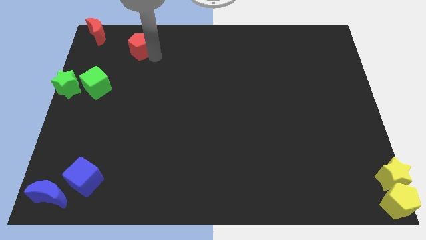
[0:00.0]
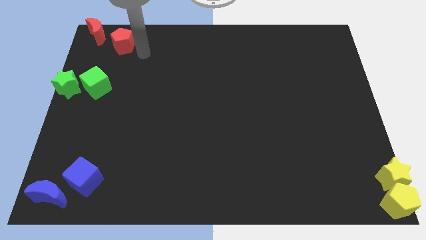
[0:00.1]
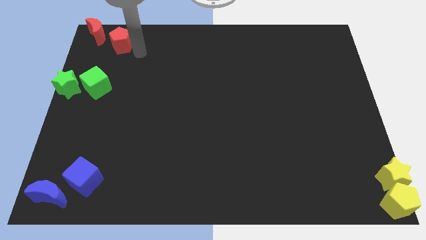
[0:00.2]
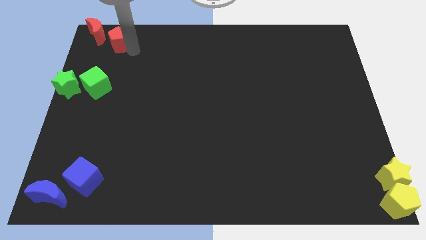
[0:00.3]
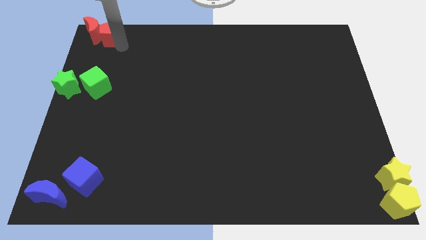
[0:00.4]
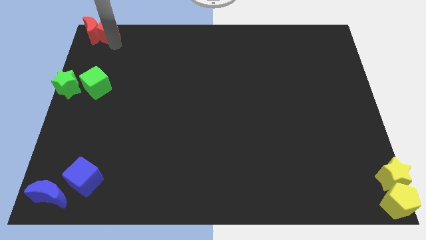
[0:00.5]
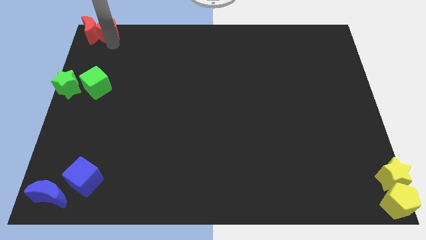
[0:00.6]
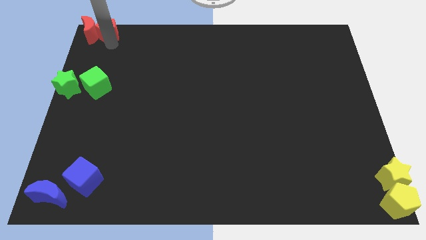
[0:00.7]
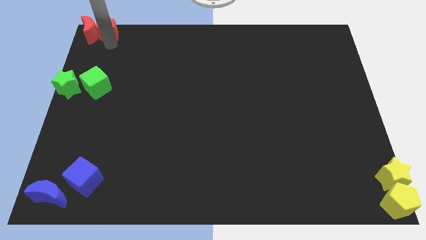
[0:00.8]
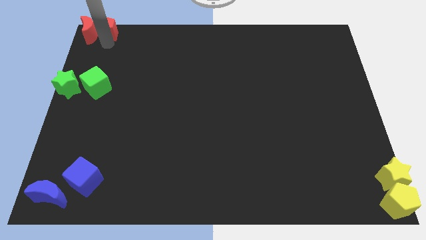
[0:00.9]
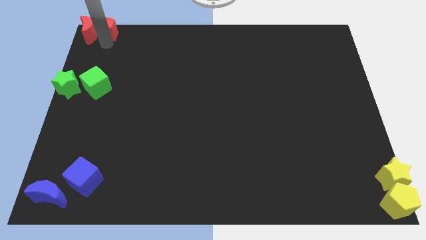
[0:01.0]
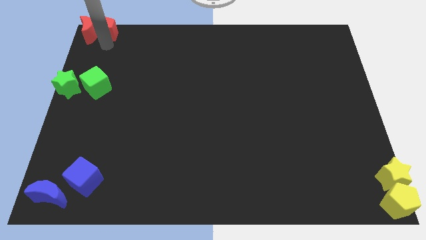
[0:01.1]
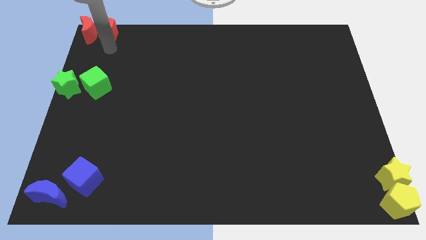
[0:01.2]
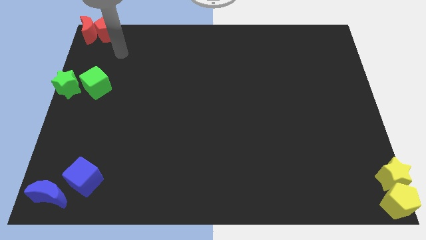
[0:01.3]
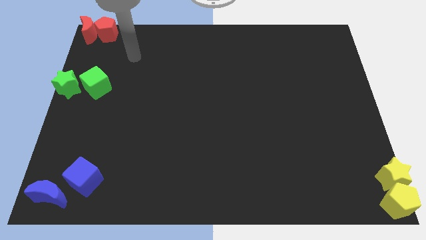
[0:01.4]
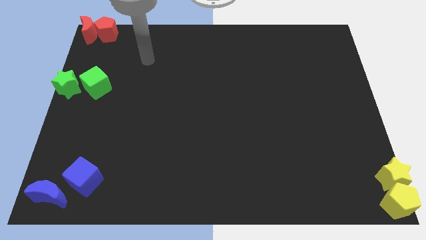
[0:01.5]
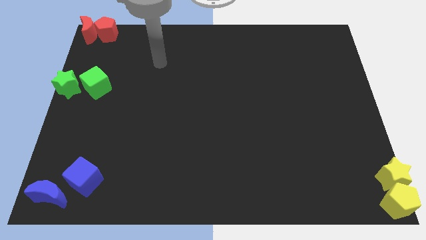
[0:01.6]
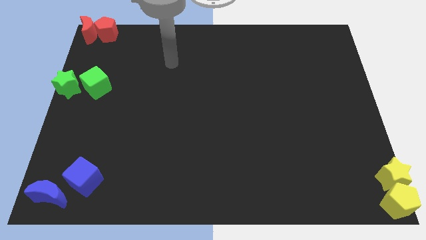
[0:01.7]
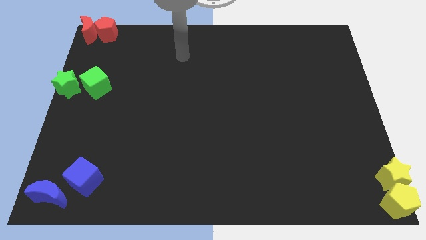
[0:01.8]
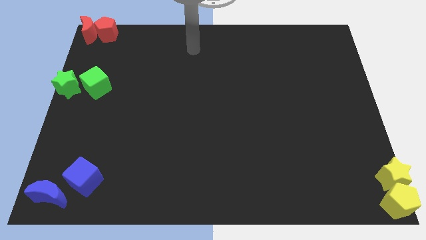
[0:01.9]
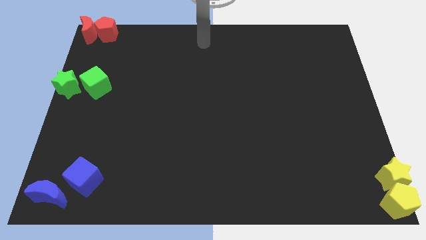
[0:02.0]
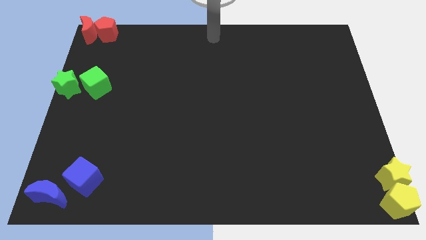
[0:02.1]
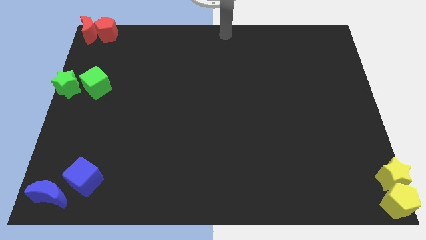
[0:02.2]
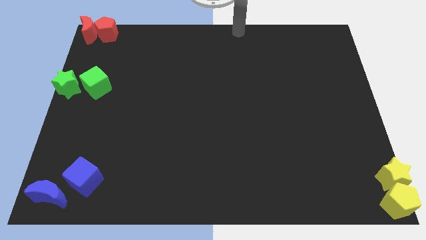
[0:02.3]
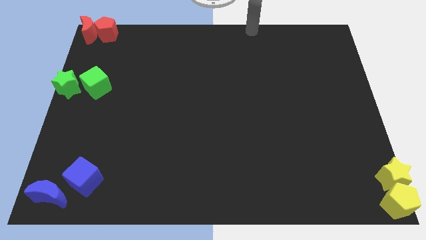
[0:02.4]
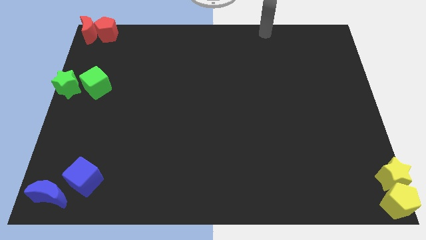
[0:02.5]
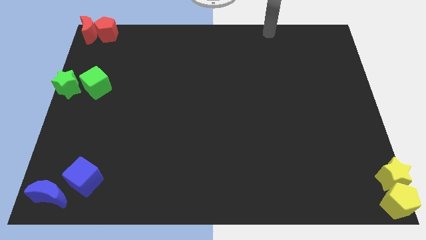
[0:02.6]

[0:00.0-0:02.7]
put the red blocks together to top left corner

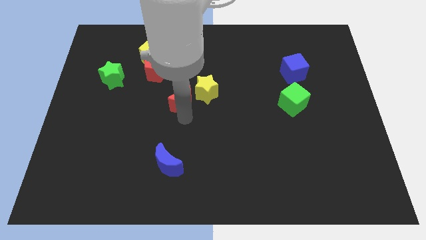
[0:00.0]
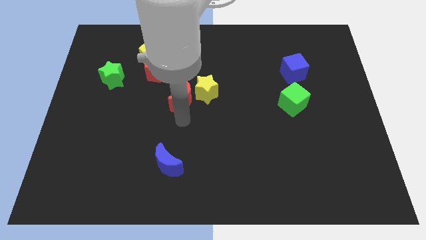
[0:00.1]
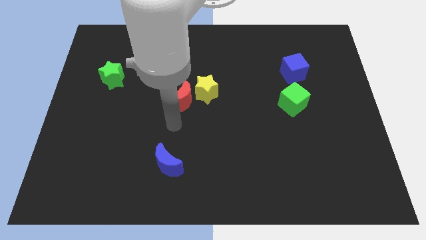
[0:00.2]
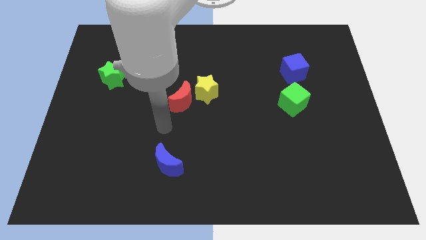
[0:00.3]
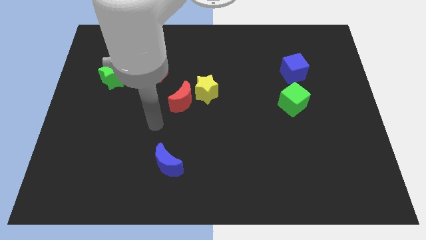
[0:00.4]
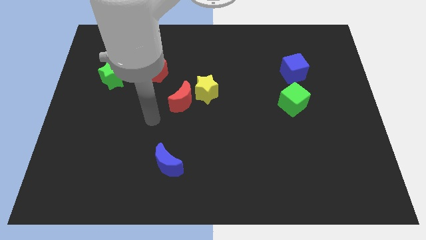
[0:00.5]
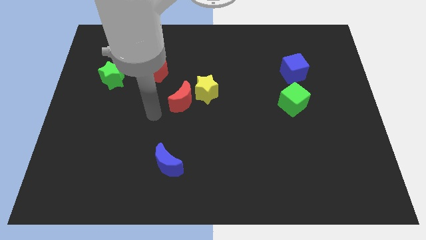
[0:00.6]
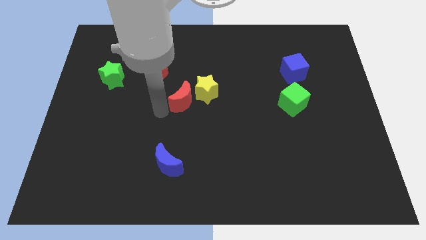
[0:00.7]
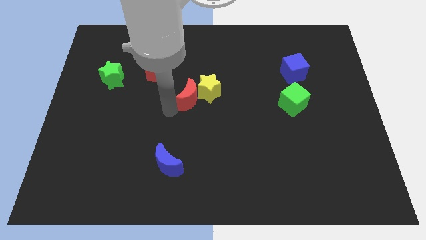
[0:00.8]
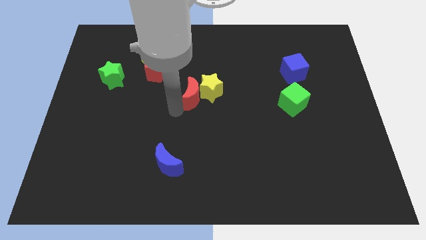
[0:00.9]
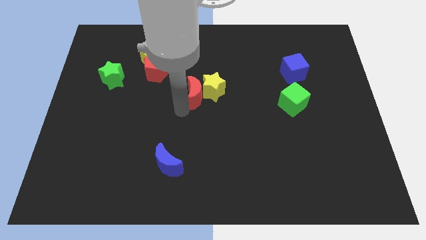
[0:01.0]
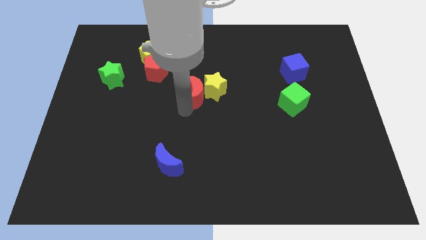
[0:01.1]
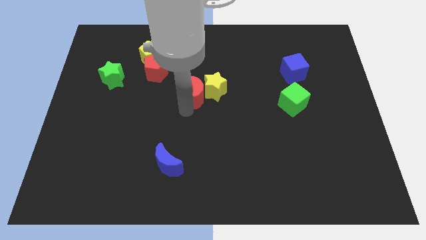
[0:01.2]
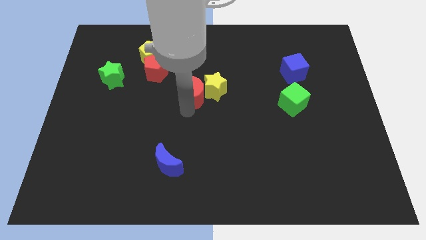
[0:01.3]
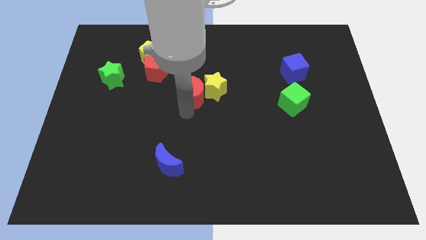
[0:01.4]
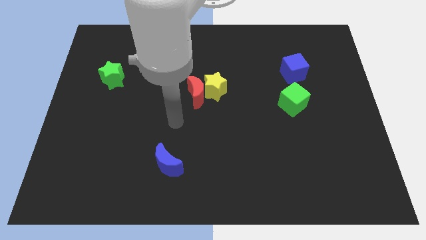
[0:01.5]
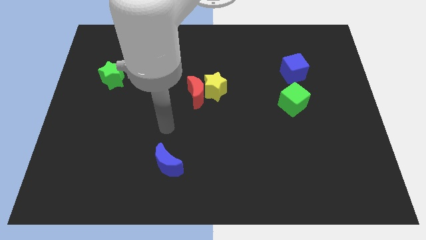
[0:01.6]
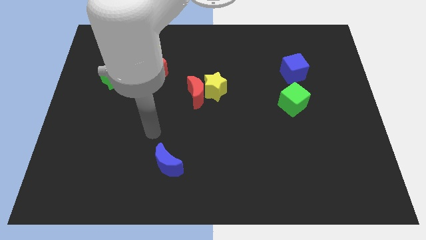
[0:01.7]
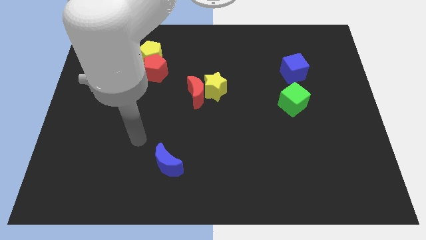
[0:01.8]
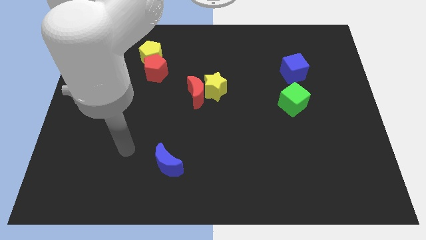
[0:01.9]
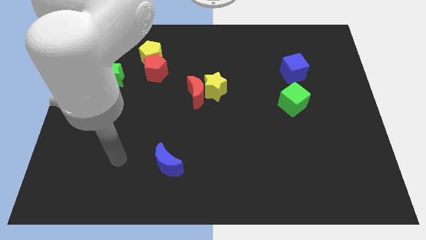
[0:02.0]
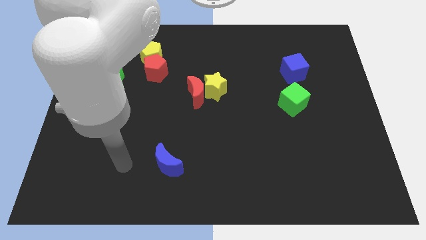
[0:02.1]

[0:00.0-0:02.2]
push the red moon into the yellow star

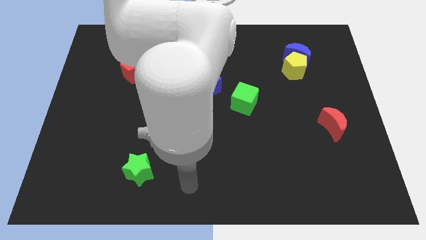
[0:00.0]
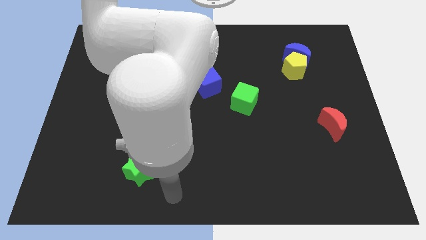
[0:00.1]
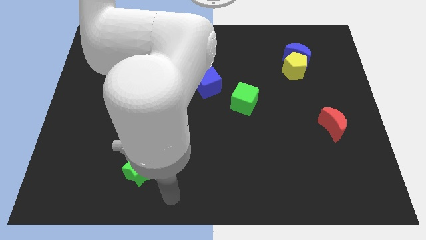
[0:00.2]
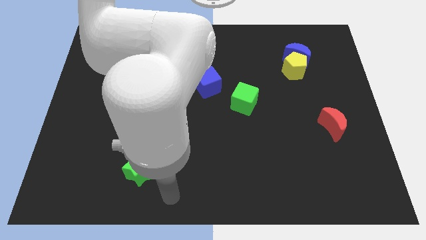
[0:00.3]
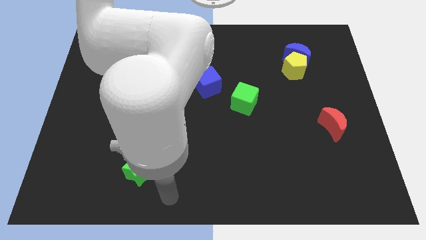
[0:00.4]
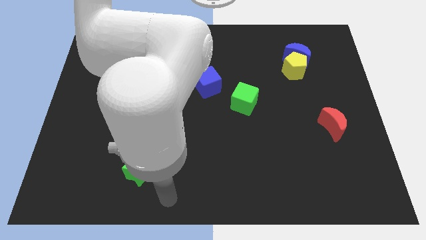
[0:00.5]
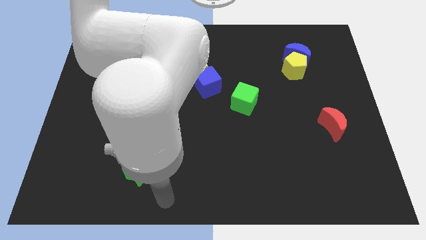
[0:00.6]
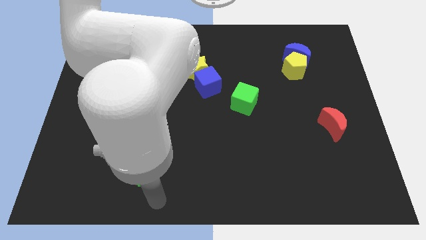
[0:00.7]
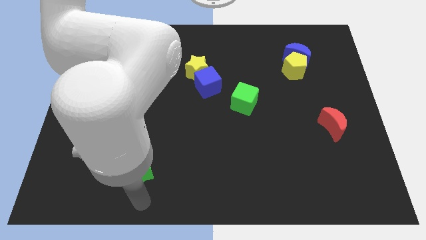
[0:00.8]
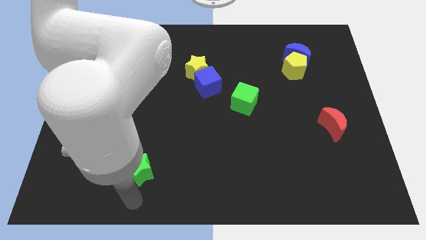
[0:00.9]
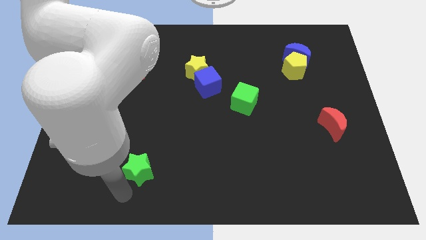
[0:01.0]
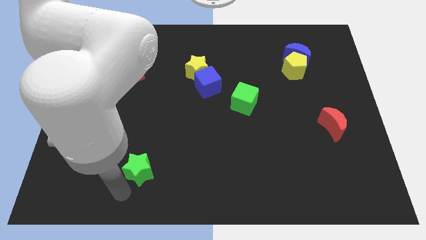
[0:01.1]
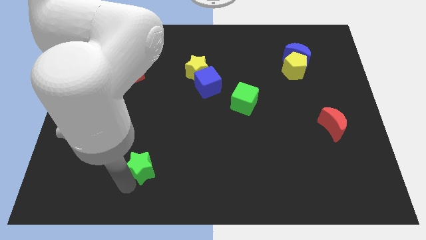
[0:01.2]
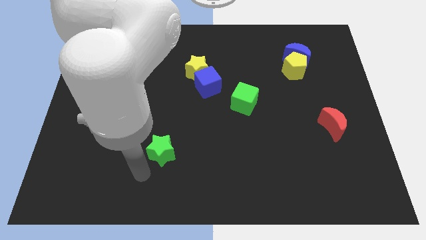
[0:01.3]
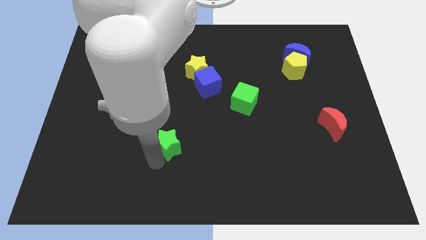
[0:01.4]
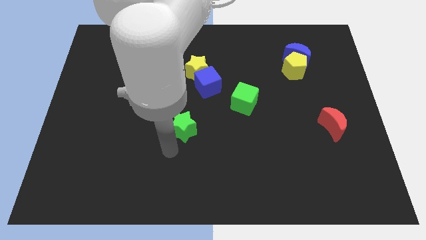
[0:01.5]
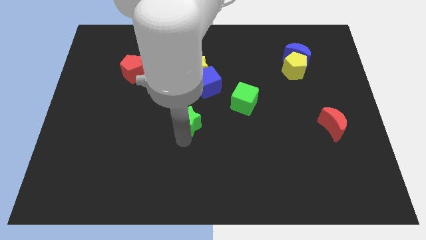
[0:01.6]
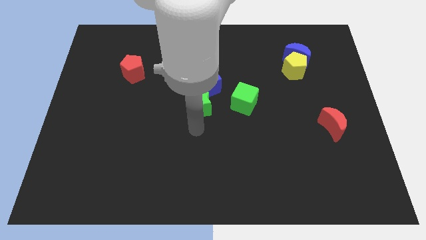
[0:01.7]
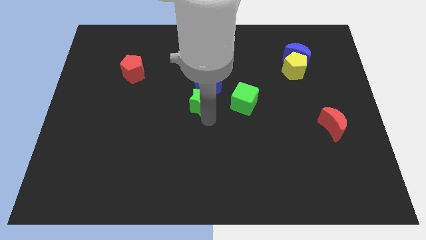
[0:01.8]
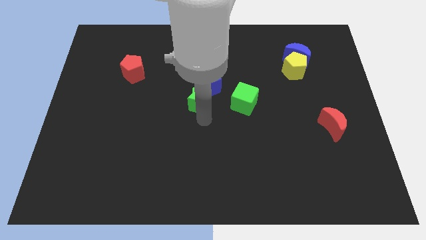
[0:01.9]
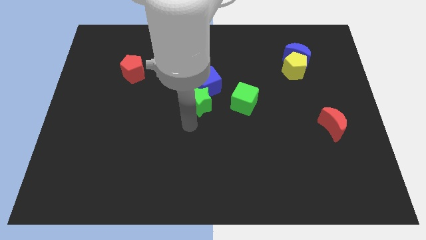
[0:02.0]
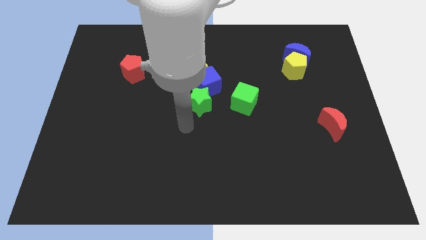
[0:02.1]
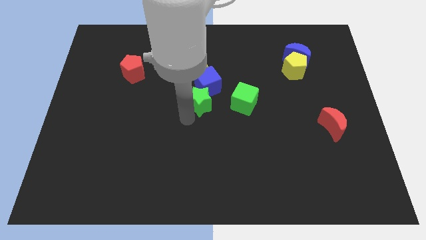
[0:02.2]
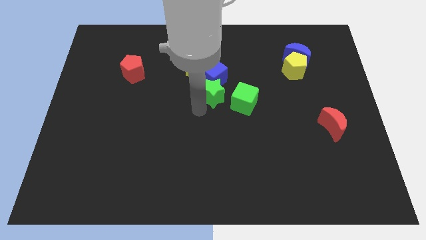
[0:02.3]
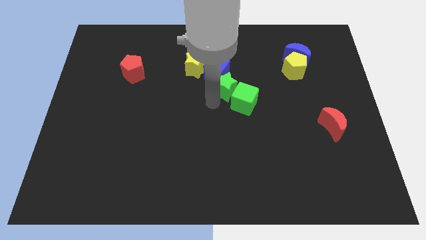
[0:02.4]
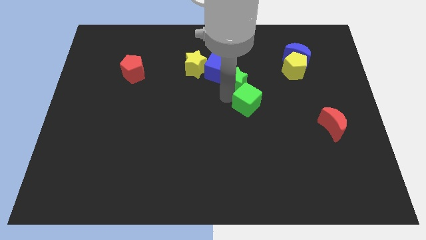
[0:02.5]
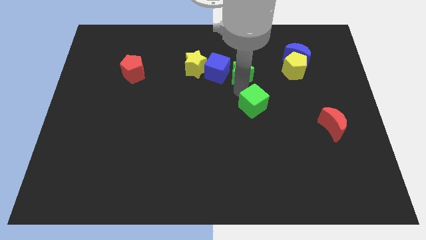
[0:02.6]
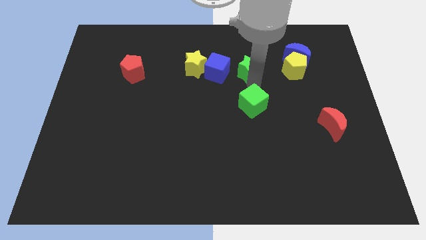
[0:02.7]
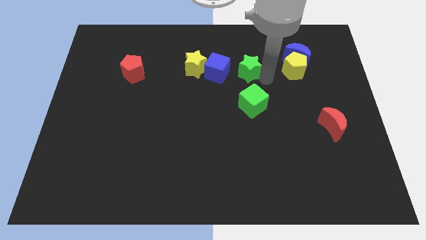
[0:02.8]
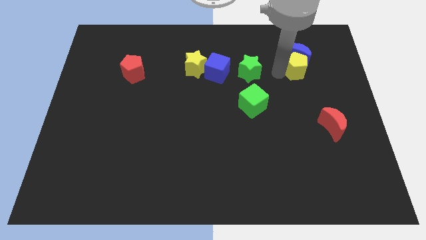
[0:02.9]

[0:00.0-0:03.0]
push green star right to the blue cube

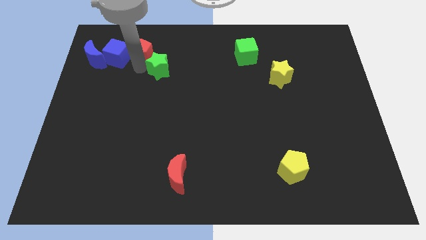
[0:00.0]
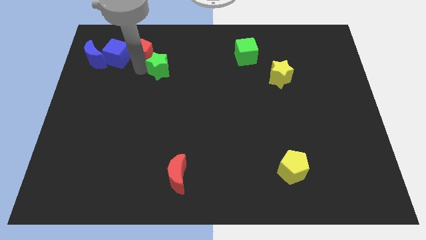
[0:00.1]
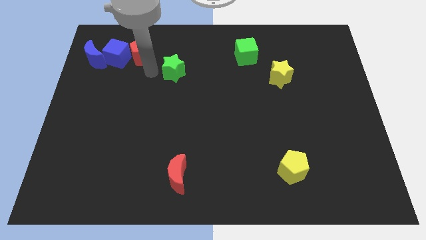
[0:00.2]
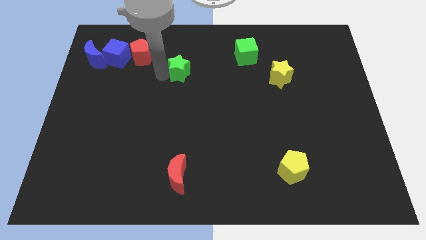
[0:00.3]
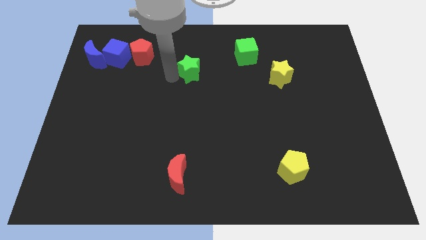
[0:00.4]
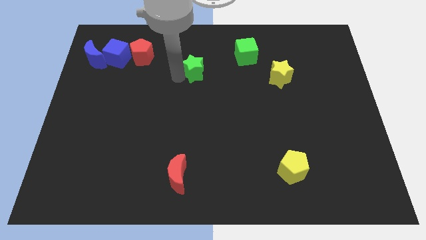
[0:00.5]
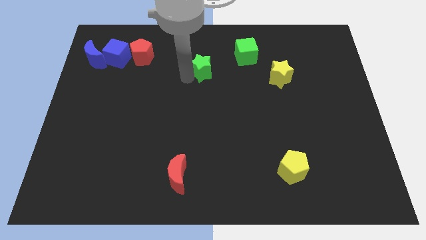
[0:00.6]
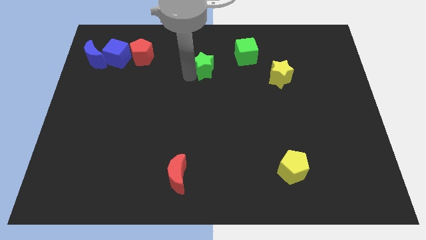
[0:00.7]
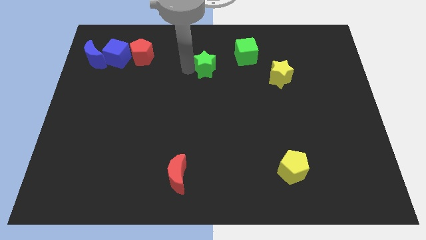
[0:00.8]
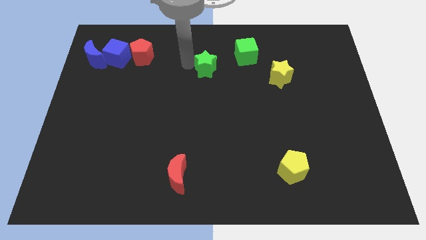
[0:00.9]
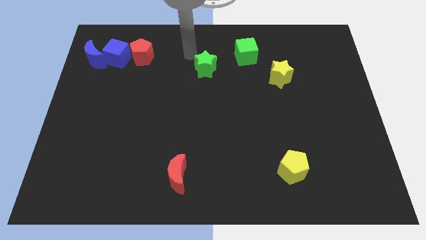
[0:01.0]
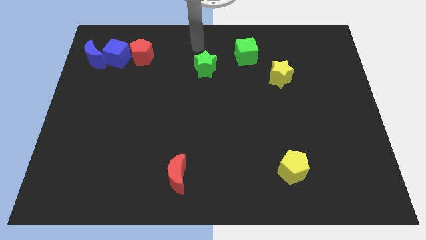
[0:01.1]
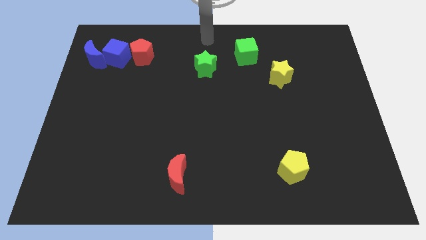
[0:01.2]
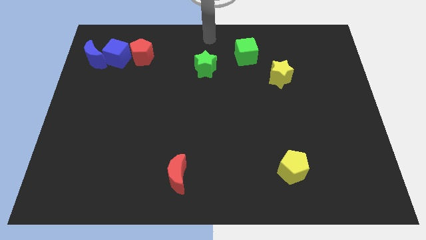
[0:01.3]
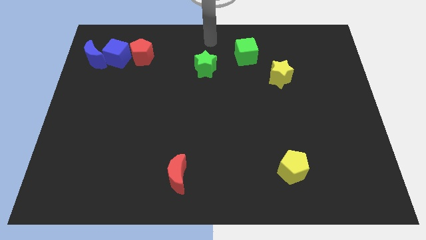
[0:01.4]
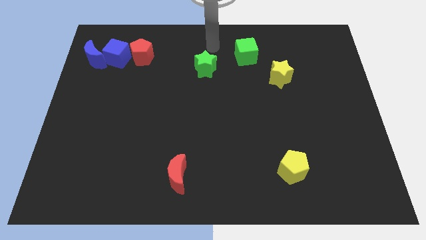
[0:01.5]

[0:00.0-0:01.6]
separate the green star from the red pentagon
